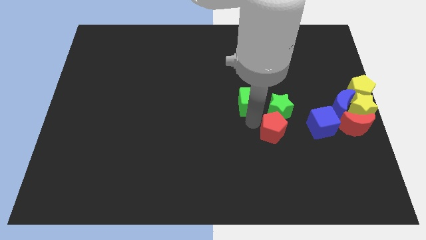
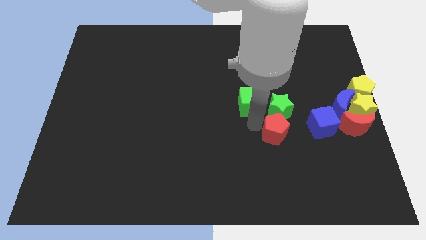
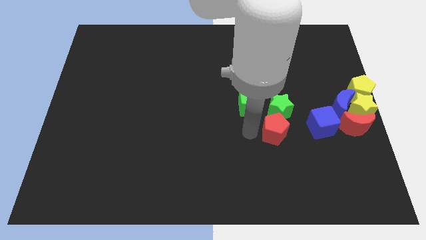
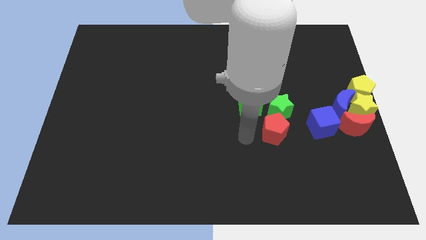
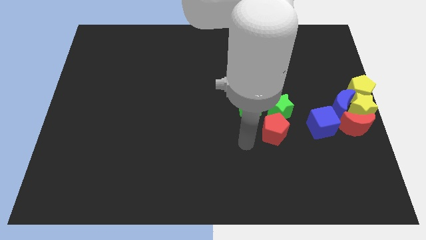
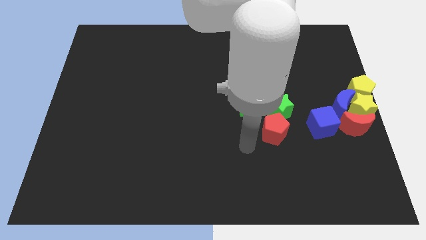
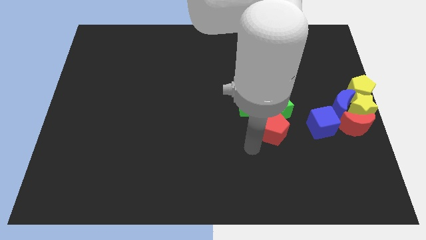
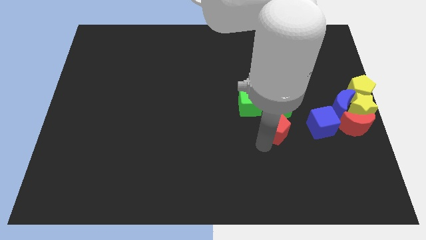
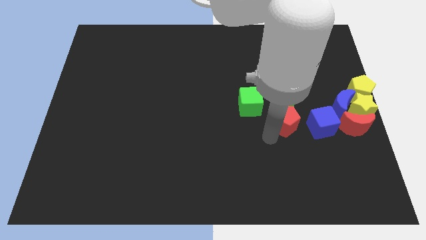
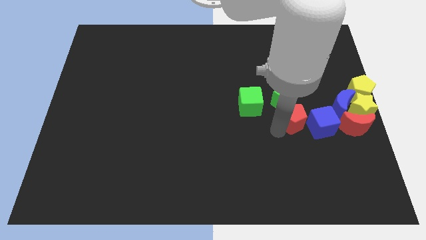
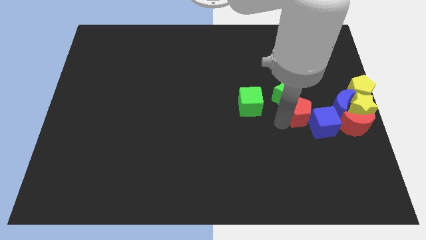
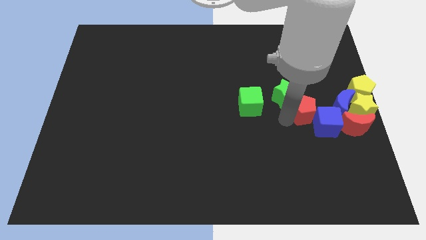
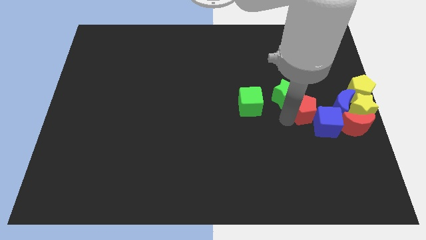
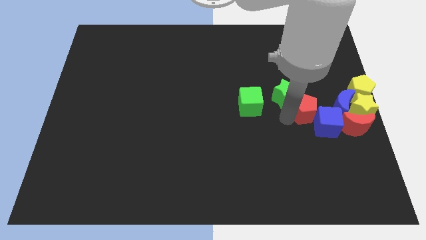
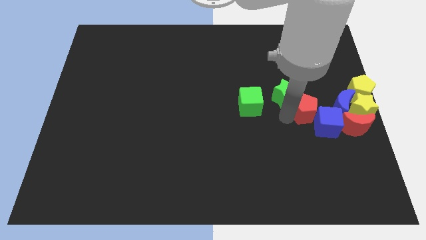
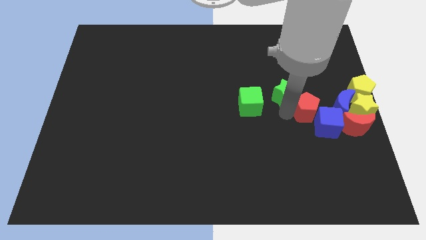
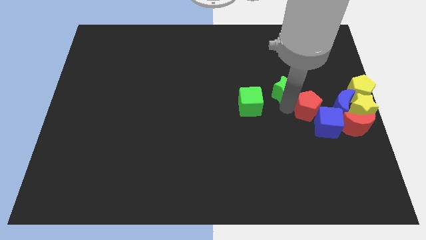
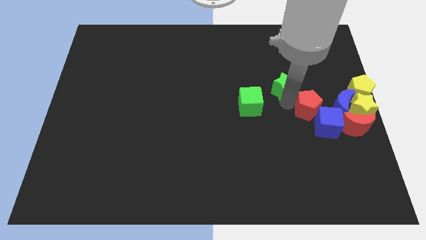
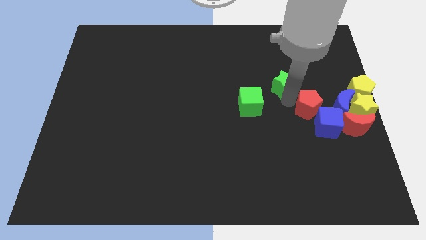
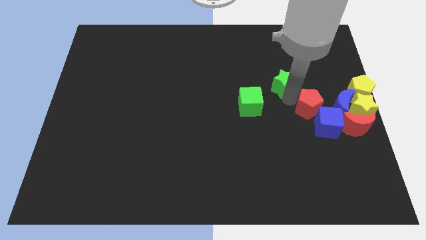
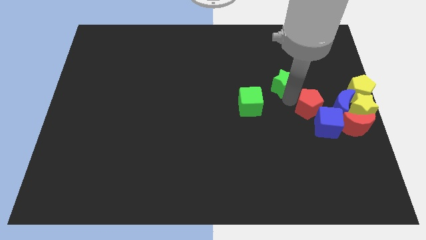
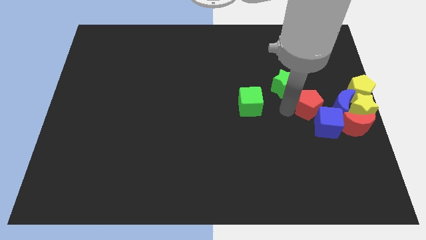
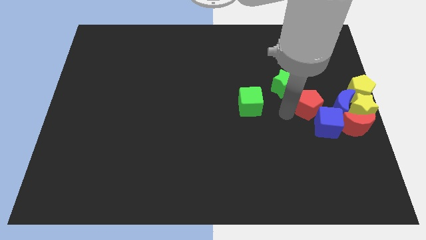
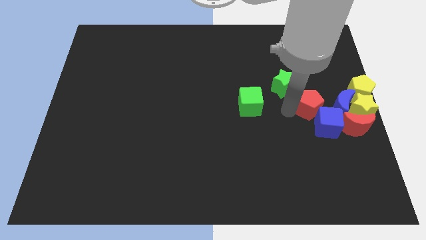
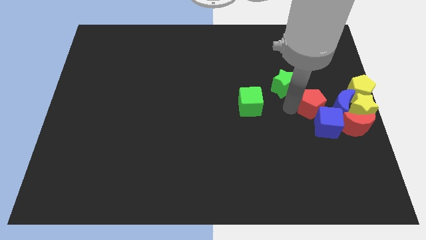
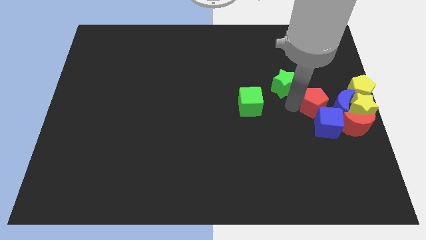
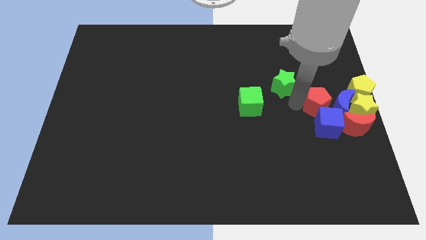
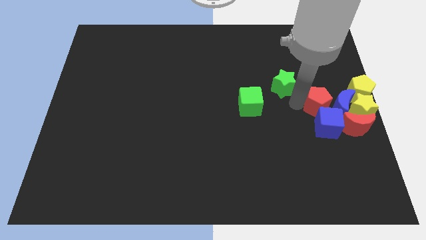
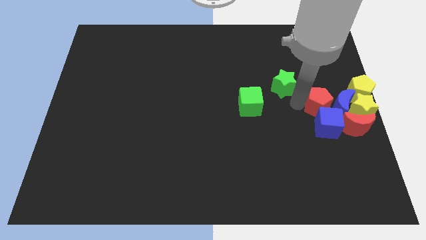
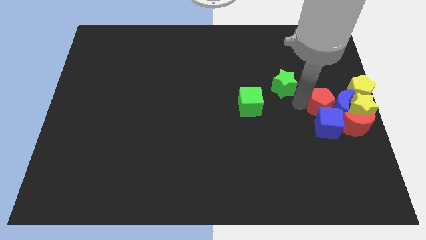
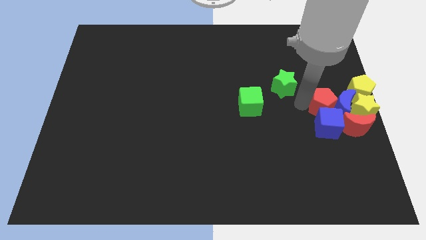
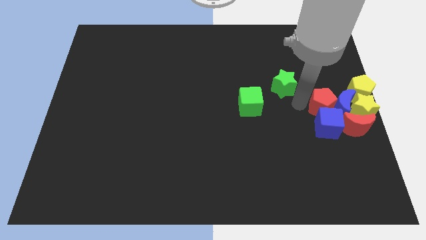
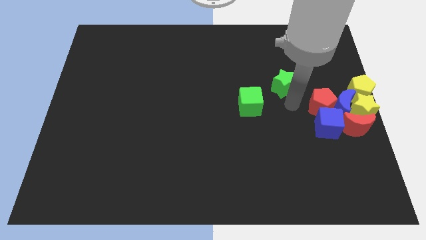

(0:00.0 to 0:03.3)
push the red pentagon into the group of blocks

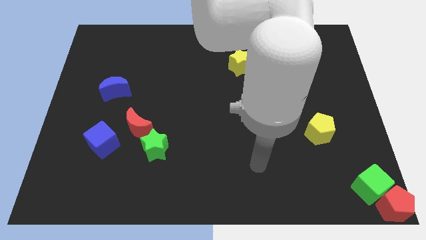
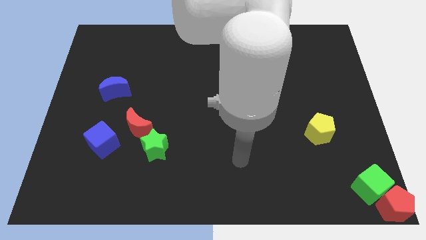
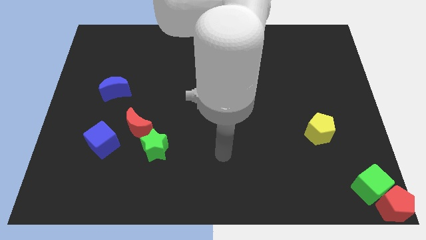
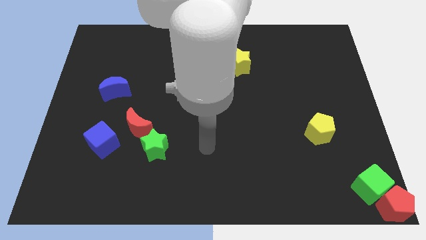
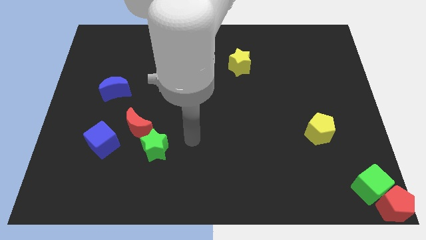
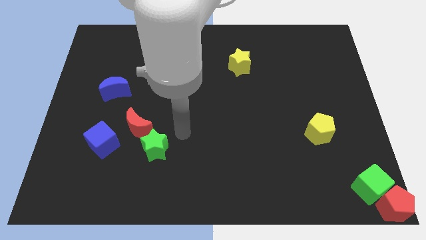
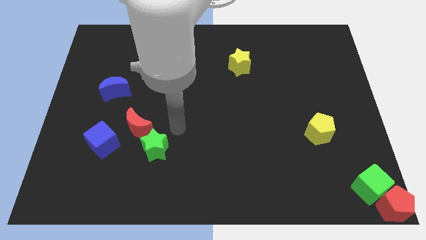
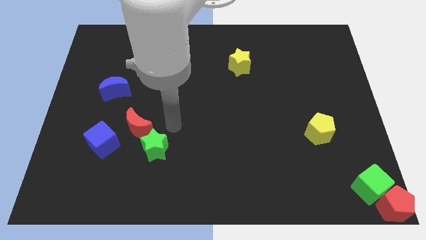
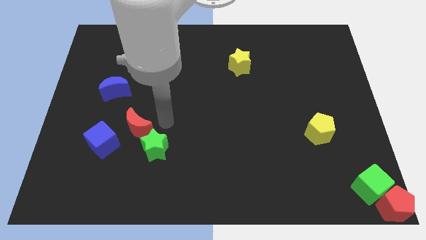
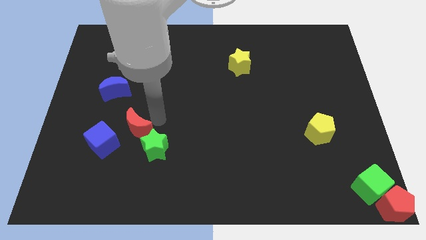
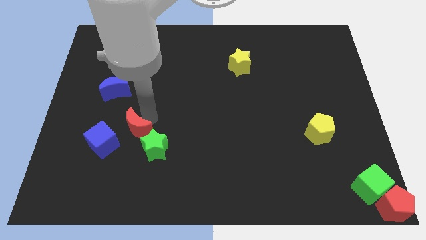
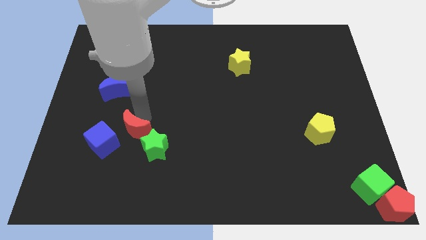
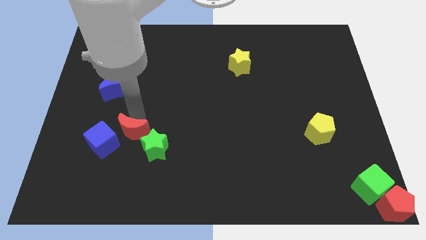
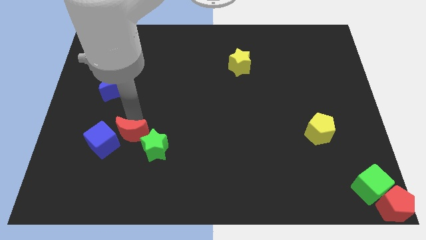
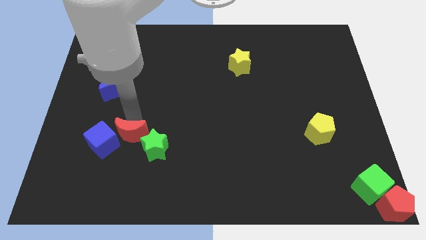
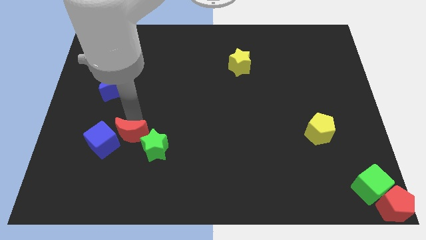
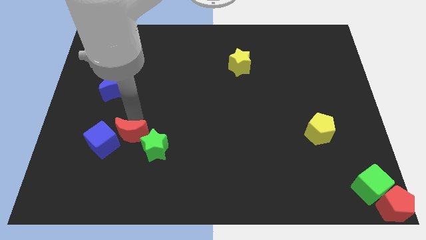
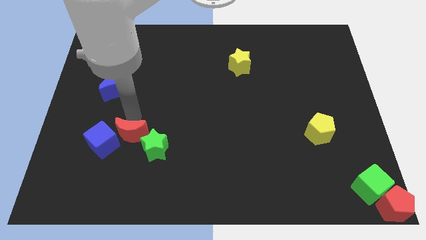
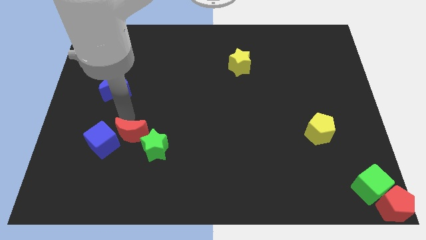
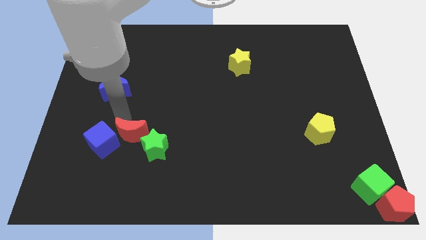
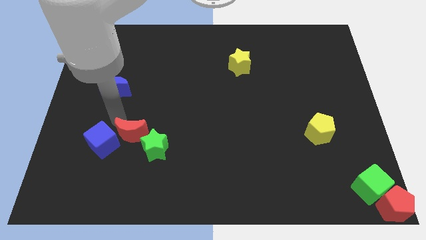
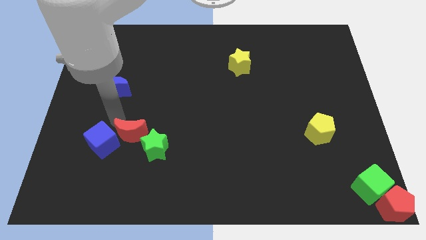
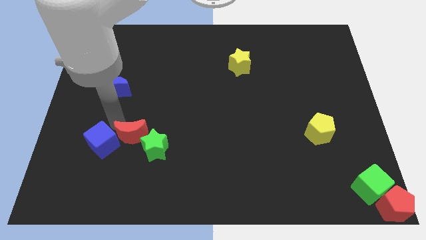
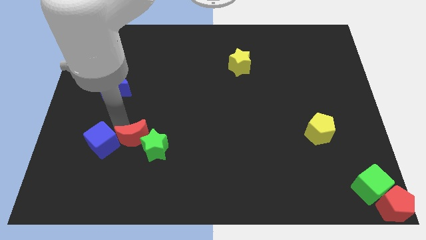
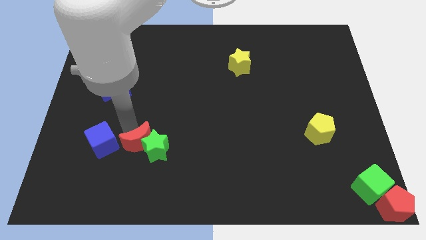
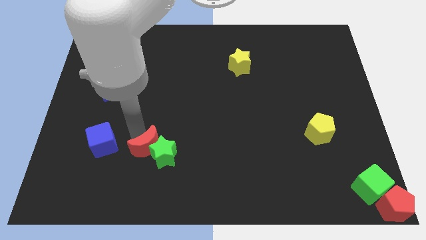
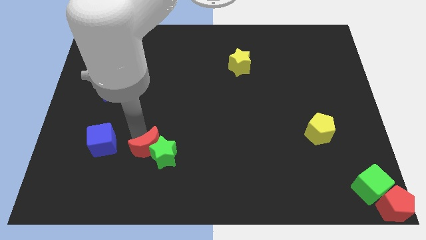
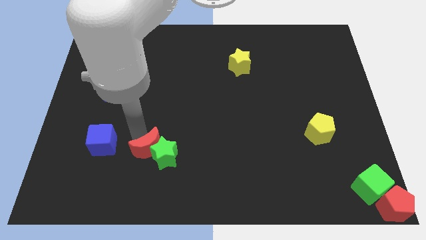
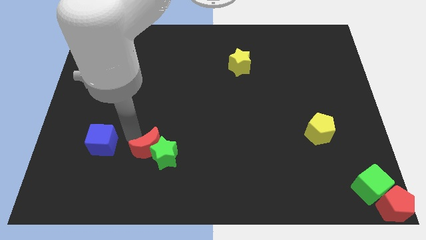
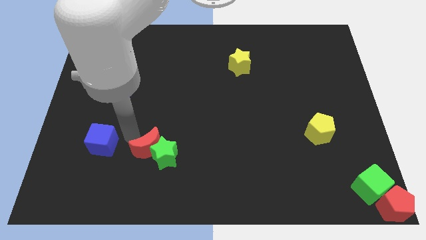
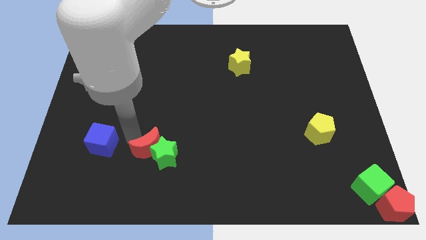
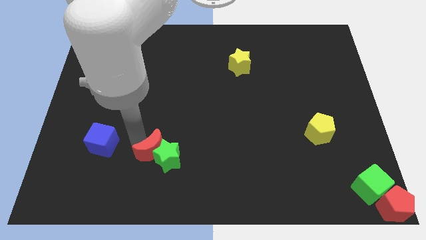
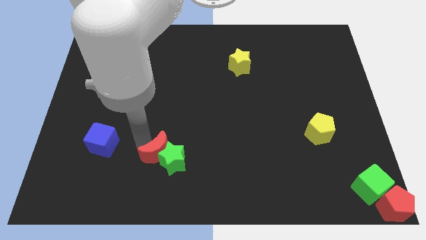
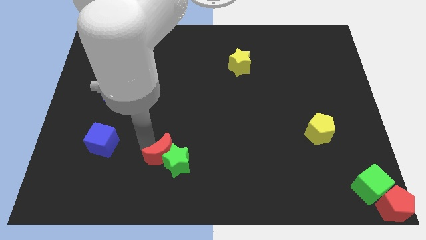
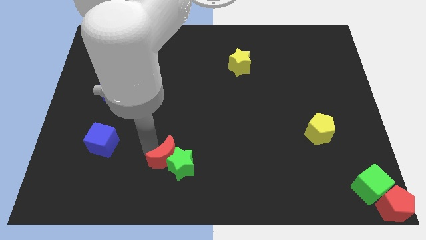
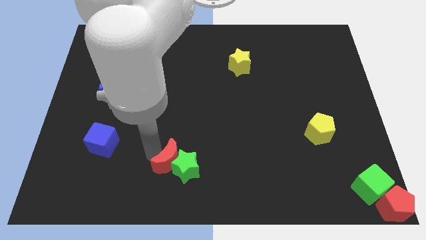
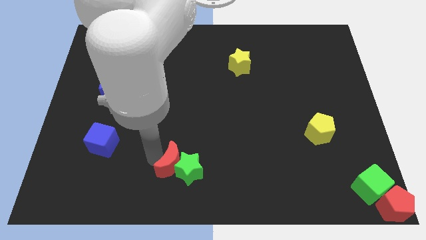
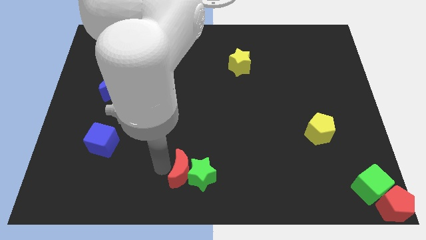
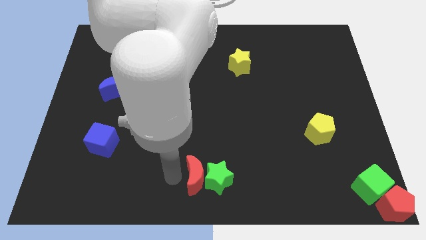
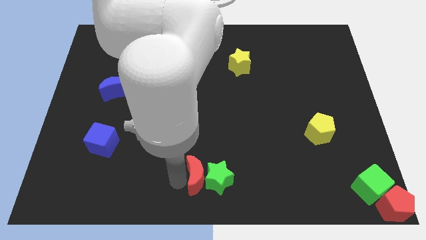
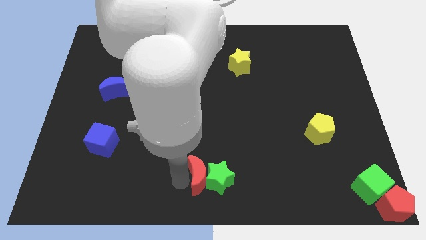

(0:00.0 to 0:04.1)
push the green star and red crescent towards the bottom center of the board

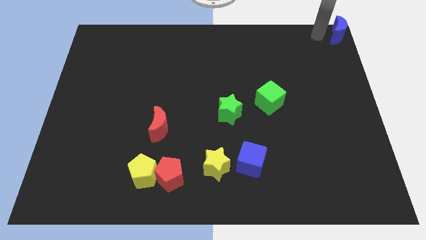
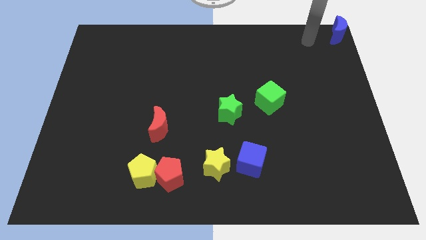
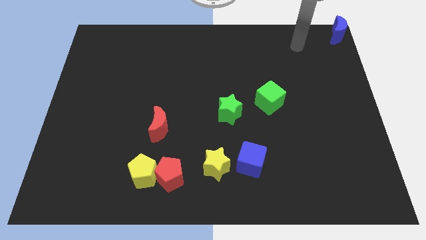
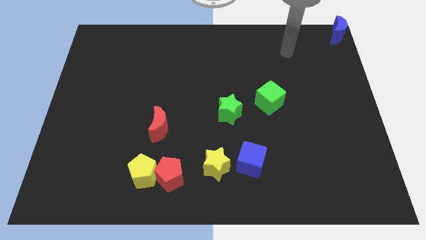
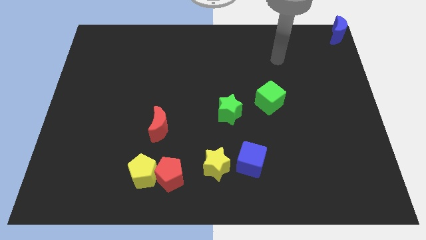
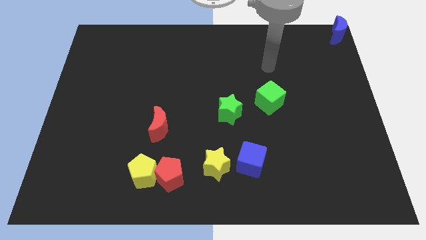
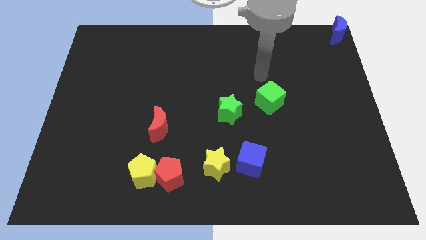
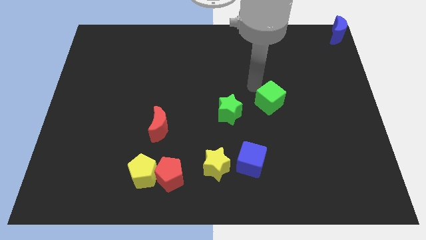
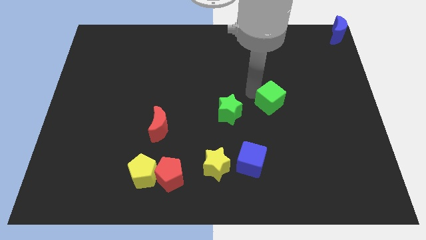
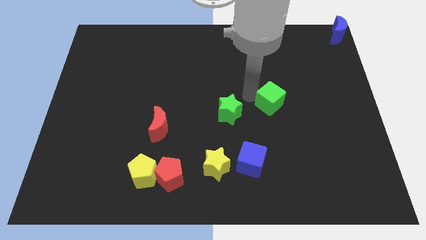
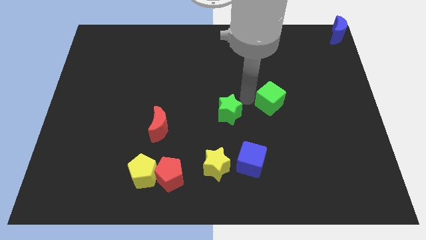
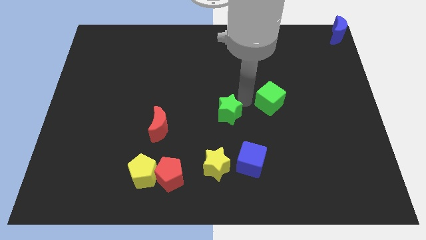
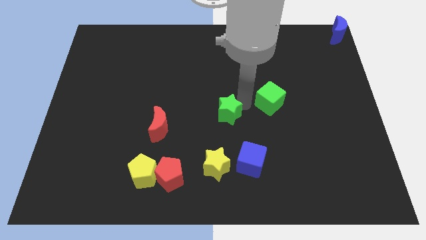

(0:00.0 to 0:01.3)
move arm towards green cube

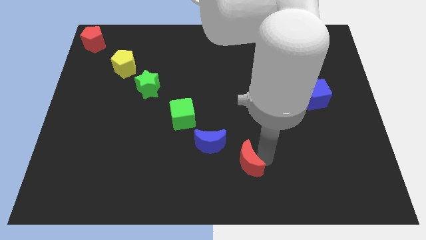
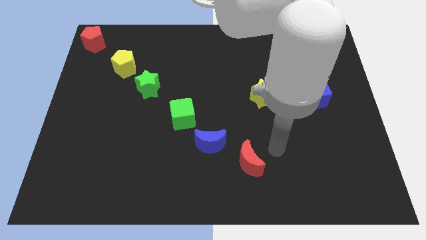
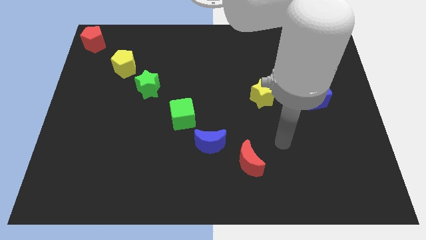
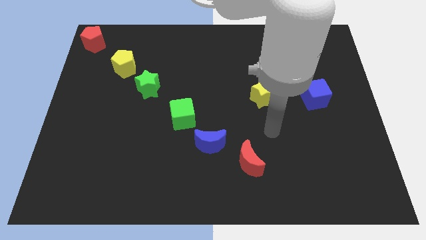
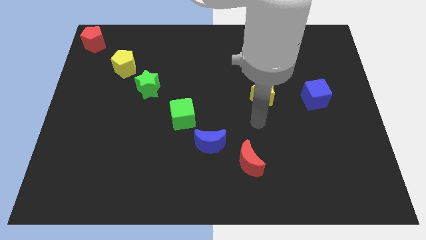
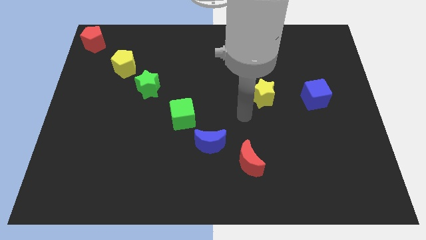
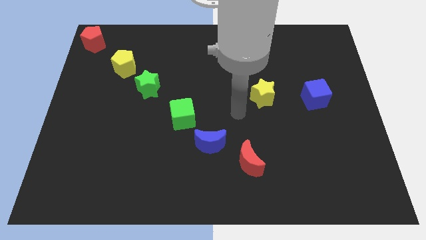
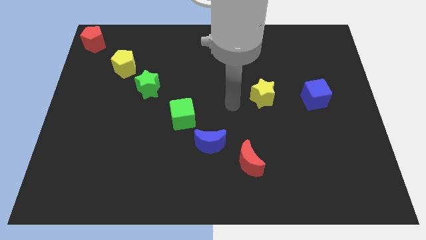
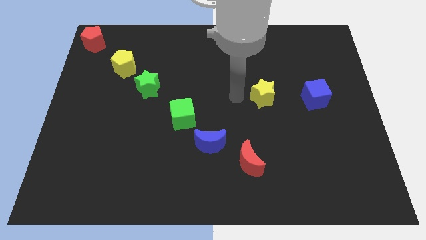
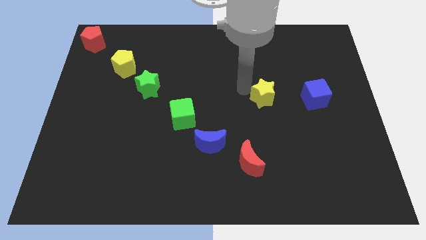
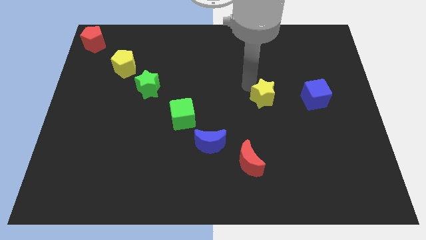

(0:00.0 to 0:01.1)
move the arm away from the red moon
